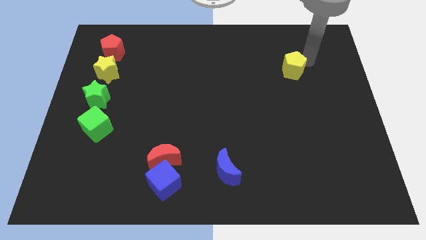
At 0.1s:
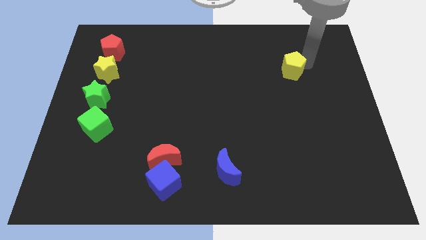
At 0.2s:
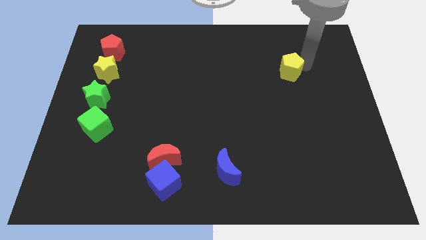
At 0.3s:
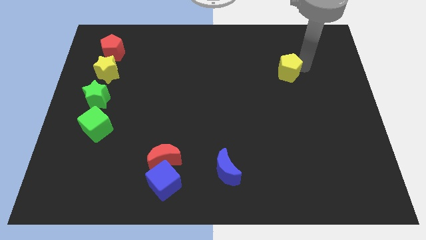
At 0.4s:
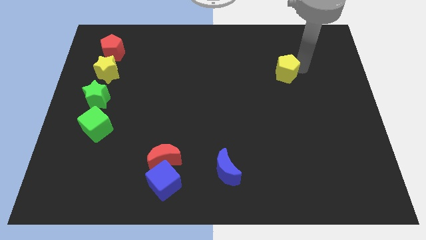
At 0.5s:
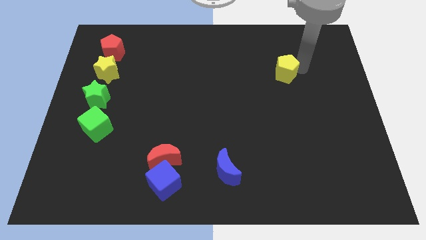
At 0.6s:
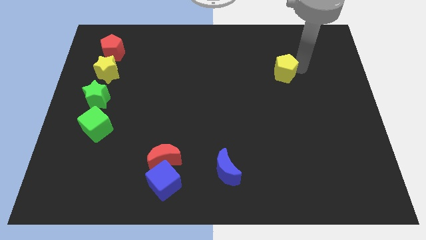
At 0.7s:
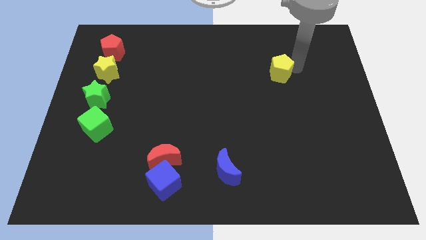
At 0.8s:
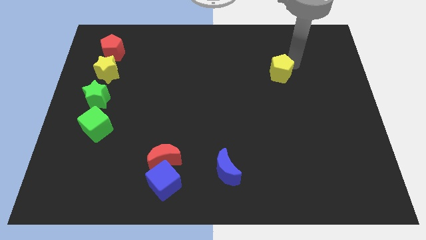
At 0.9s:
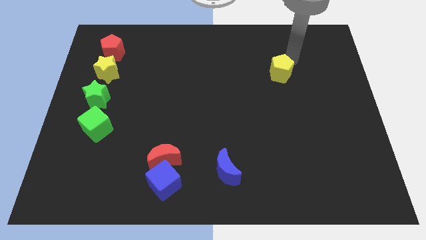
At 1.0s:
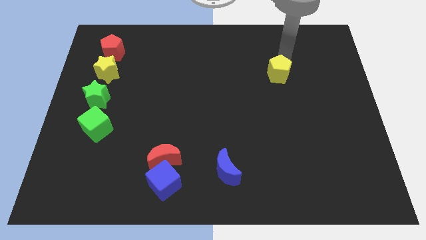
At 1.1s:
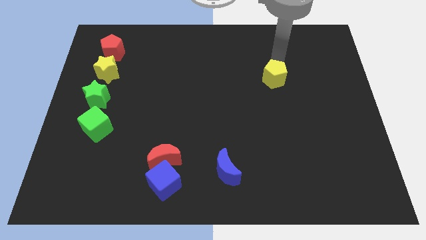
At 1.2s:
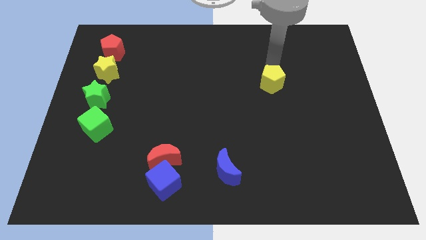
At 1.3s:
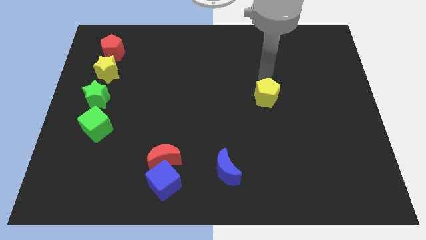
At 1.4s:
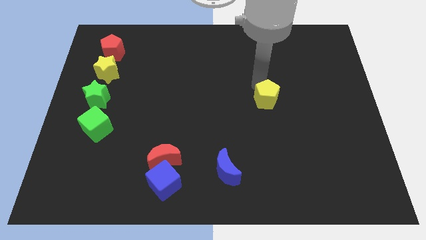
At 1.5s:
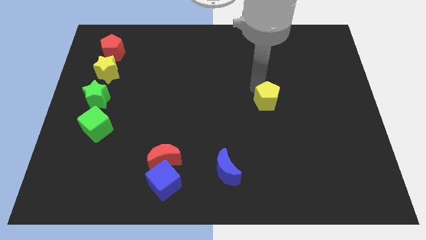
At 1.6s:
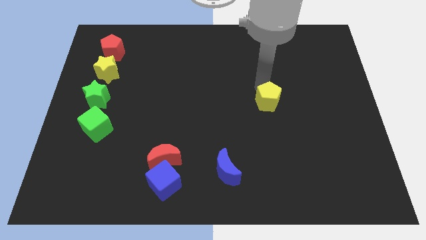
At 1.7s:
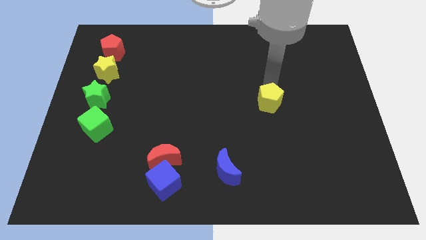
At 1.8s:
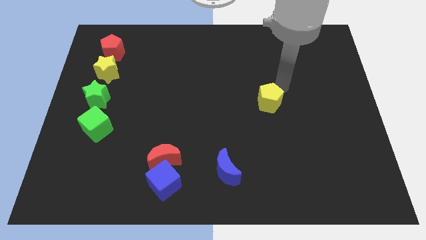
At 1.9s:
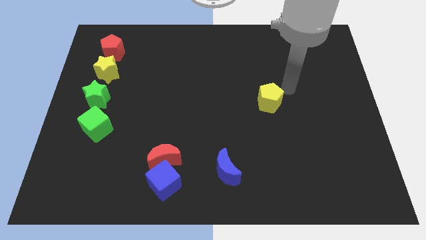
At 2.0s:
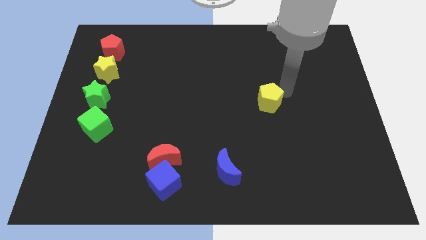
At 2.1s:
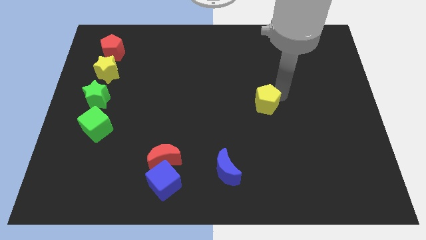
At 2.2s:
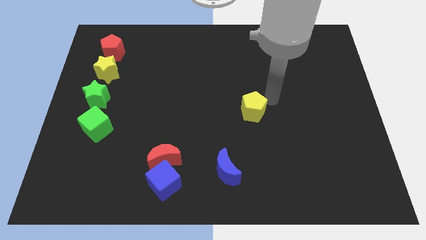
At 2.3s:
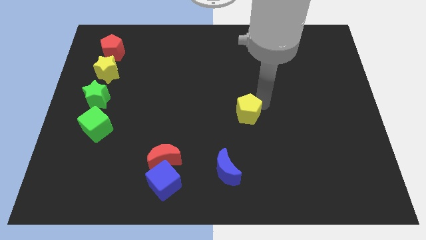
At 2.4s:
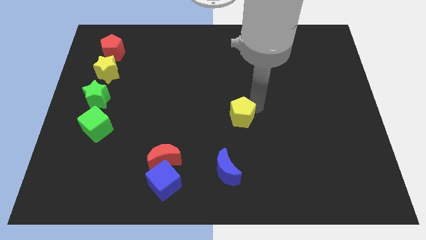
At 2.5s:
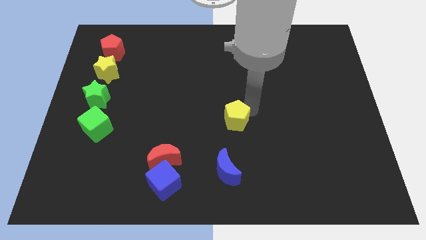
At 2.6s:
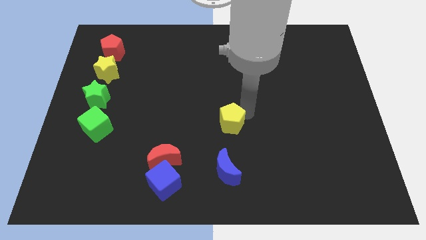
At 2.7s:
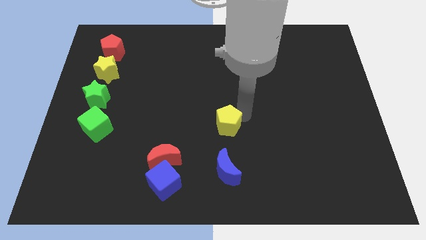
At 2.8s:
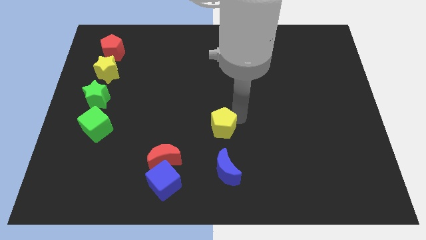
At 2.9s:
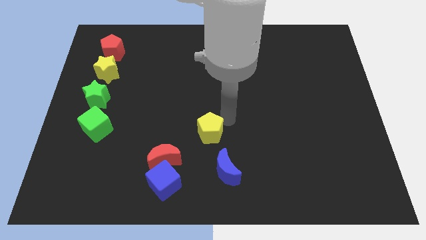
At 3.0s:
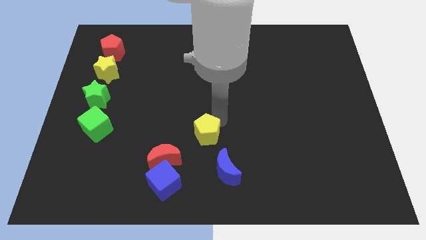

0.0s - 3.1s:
place the yellow pentagon at the top of the blue moon

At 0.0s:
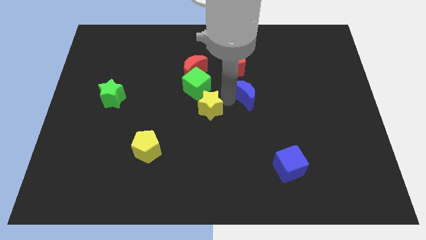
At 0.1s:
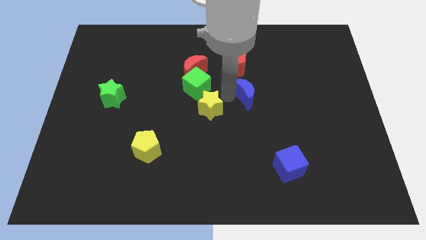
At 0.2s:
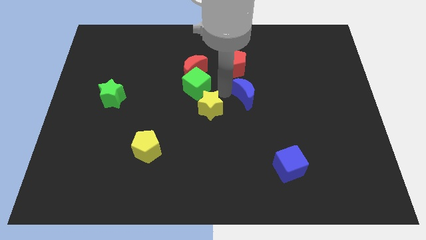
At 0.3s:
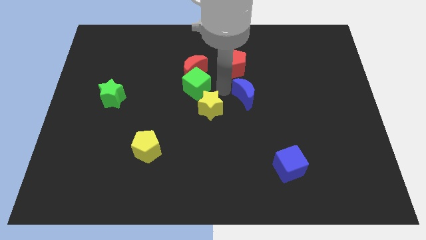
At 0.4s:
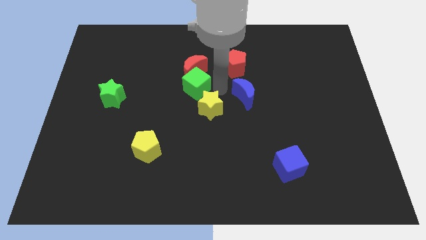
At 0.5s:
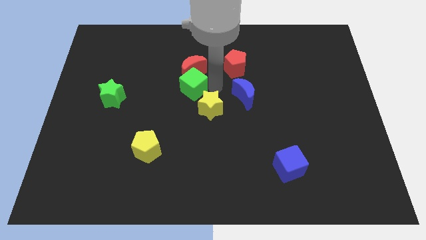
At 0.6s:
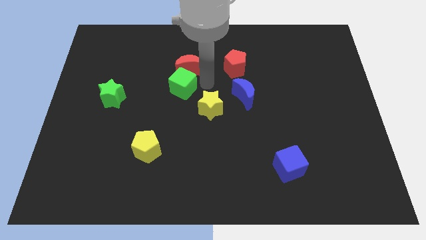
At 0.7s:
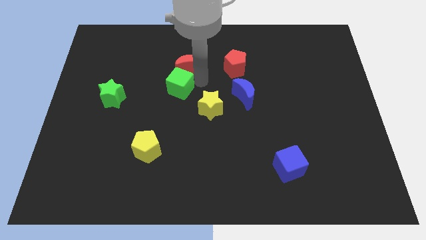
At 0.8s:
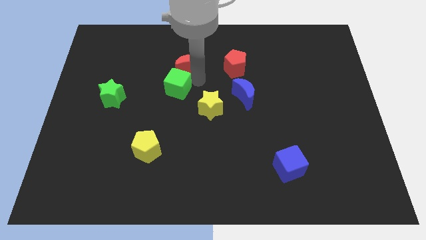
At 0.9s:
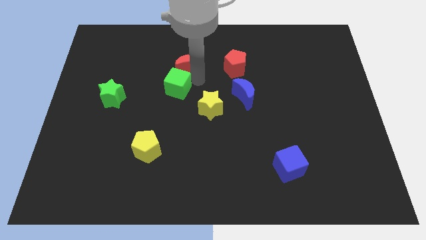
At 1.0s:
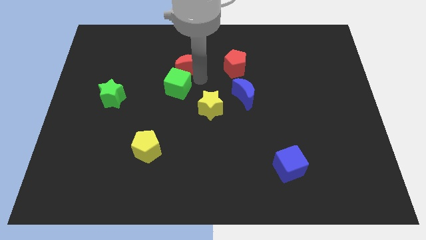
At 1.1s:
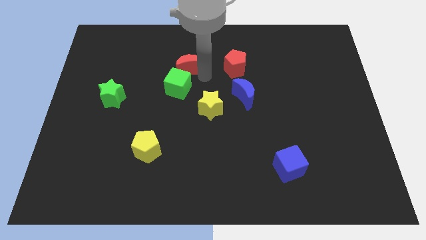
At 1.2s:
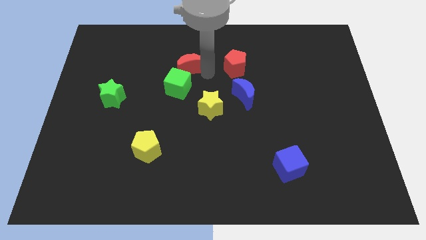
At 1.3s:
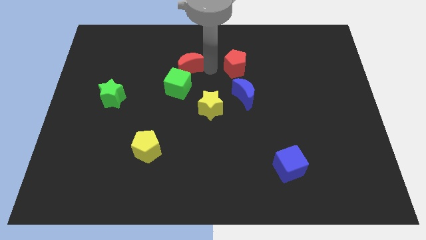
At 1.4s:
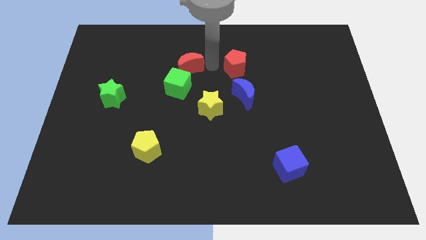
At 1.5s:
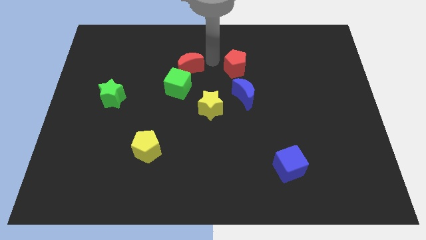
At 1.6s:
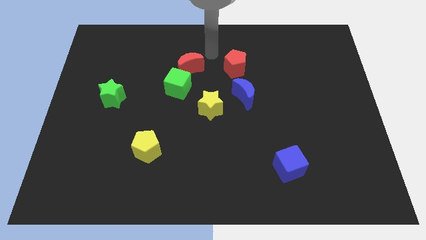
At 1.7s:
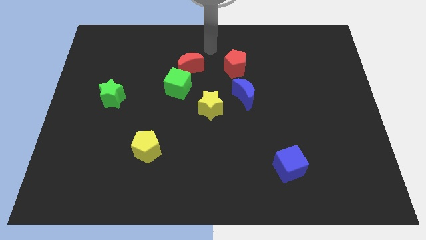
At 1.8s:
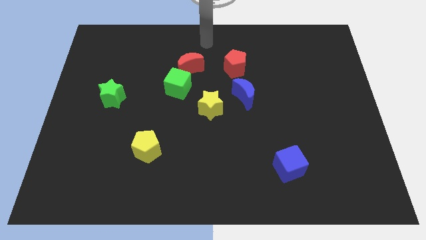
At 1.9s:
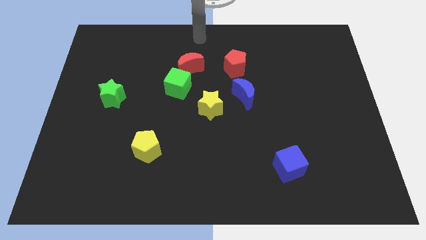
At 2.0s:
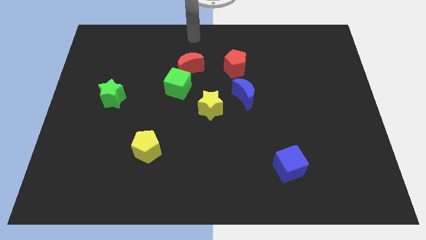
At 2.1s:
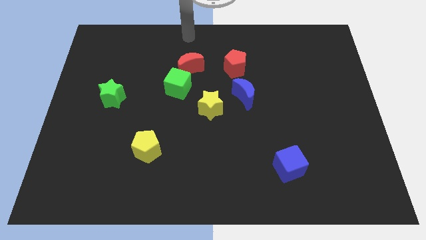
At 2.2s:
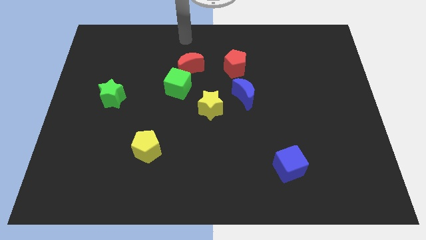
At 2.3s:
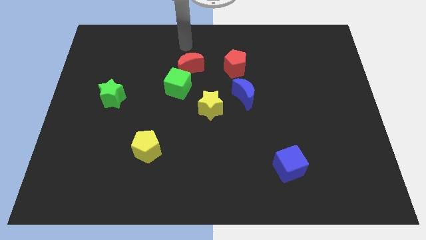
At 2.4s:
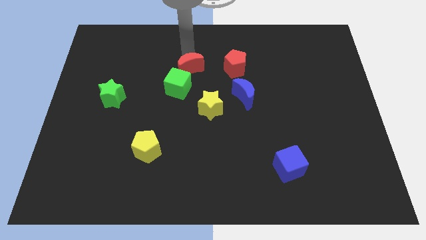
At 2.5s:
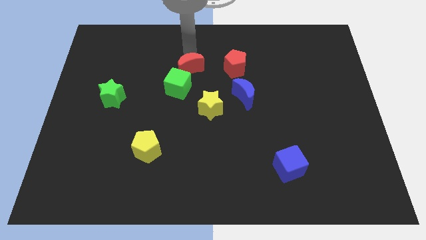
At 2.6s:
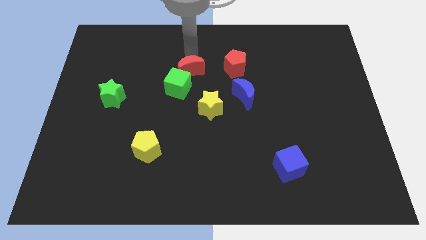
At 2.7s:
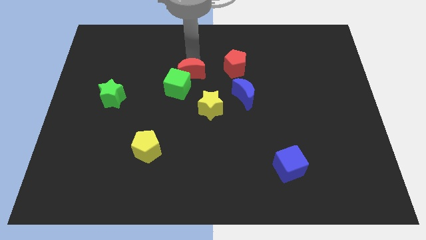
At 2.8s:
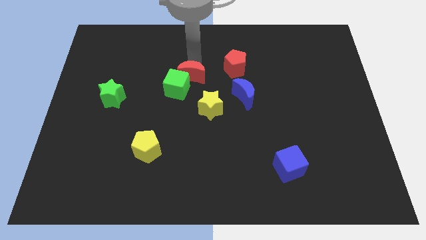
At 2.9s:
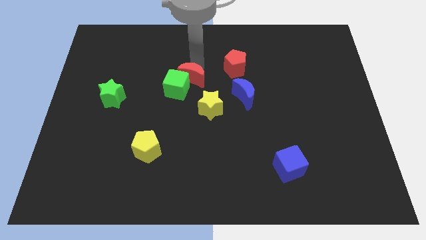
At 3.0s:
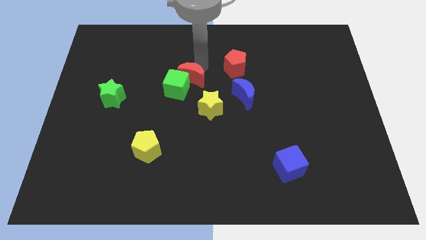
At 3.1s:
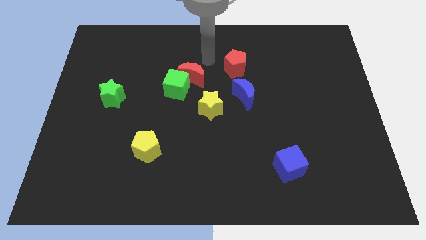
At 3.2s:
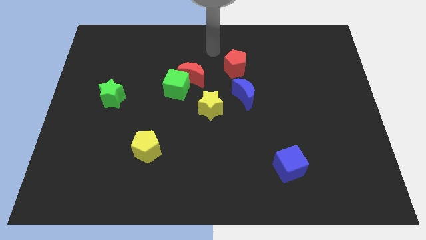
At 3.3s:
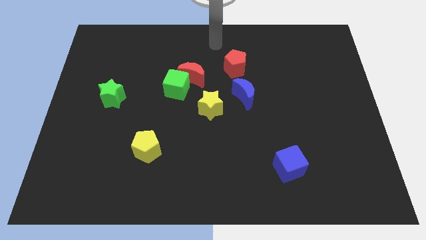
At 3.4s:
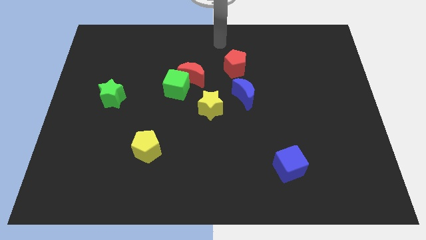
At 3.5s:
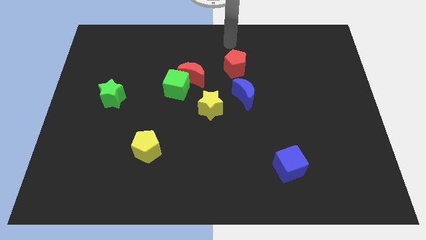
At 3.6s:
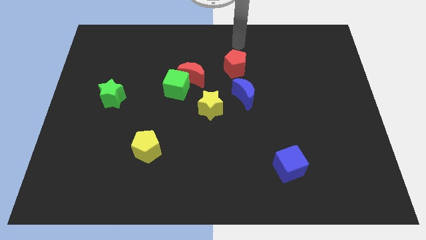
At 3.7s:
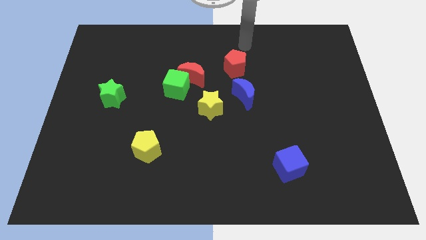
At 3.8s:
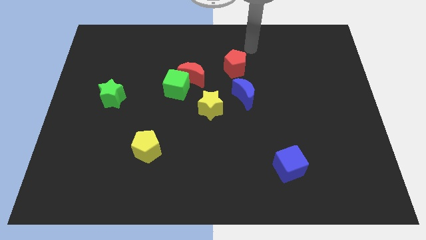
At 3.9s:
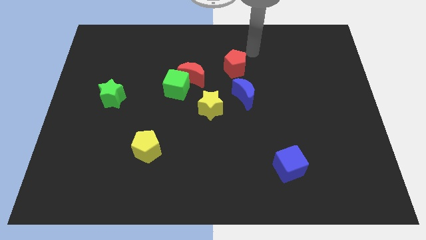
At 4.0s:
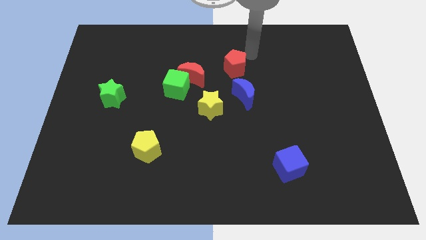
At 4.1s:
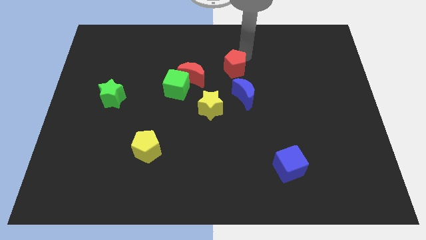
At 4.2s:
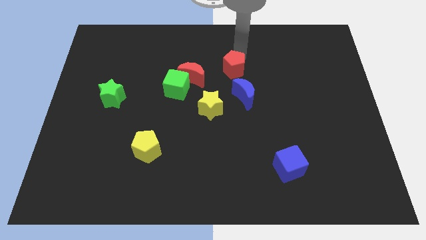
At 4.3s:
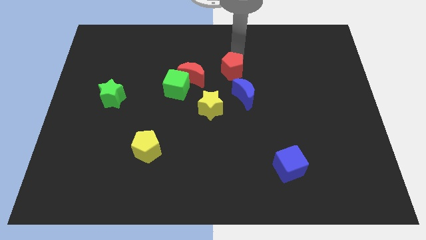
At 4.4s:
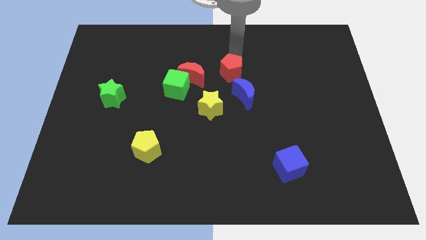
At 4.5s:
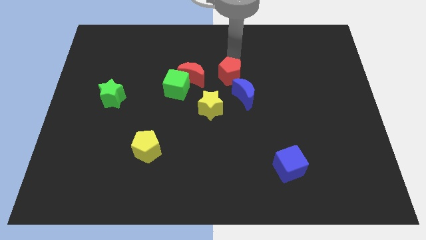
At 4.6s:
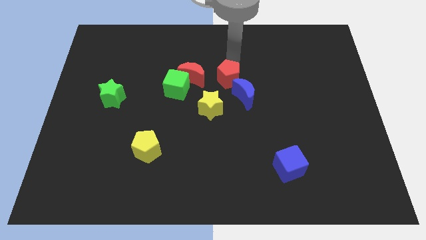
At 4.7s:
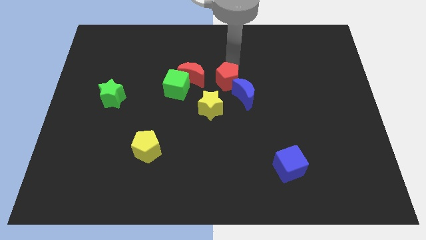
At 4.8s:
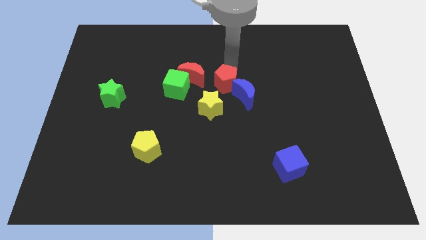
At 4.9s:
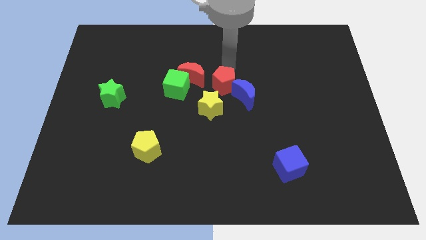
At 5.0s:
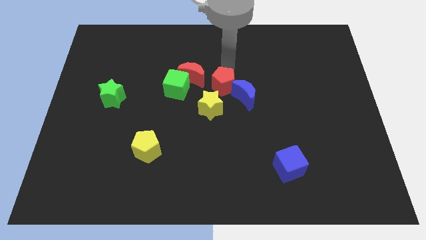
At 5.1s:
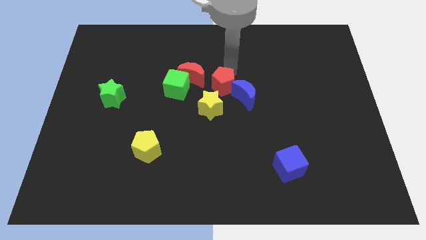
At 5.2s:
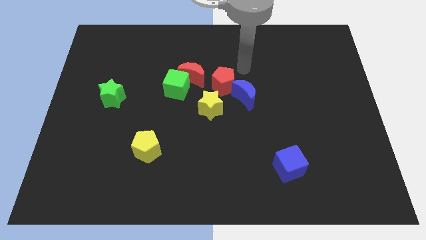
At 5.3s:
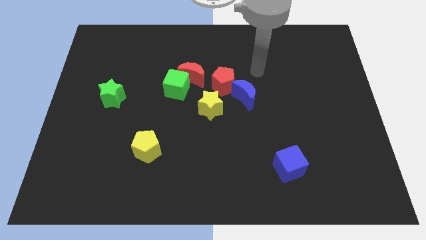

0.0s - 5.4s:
push a group of blocks to the center

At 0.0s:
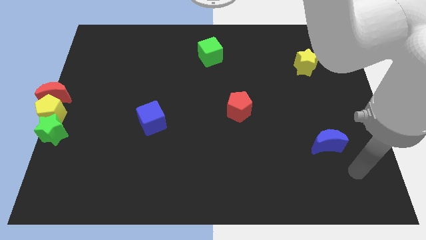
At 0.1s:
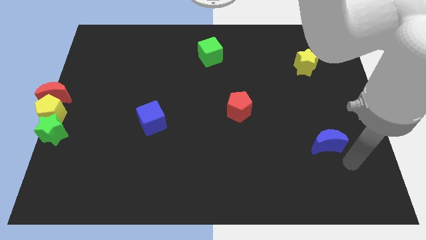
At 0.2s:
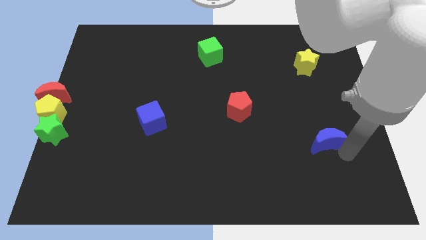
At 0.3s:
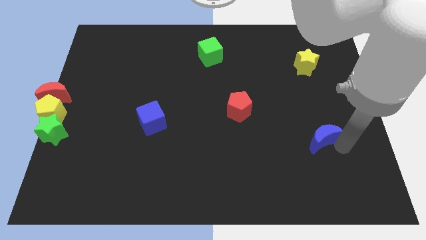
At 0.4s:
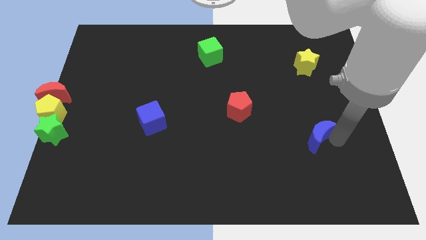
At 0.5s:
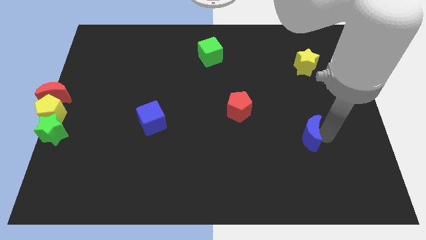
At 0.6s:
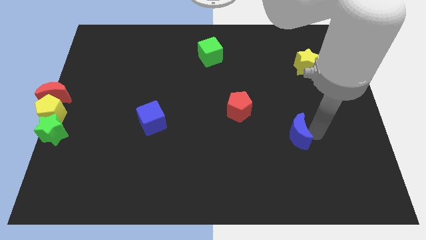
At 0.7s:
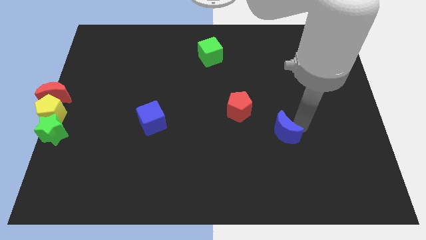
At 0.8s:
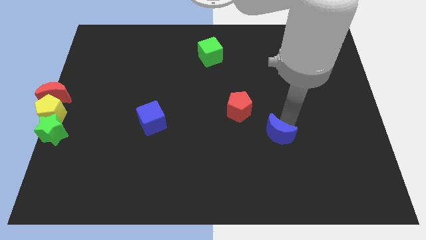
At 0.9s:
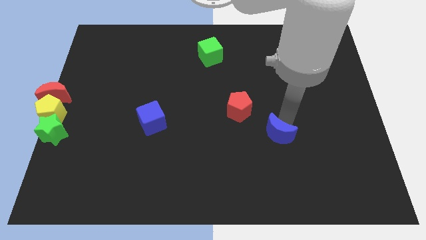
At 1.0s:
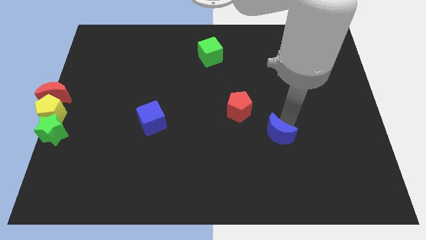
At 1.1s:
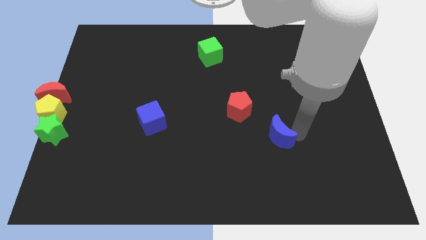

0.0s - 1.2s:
push the blue moon towards left
